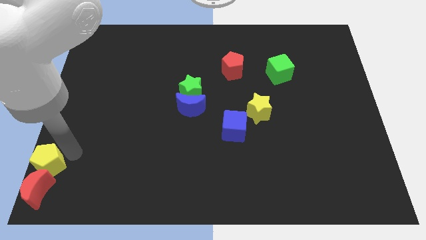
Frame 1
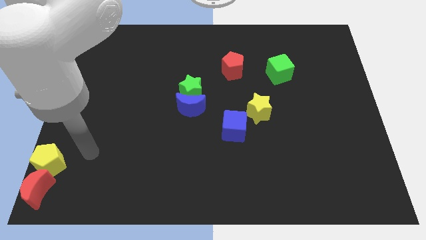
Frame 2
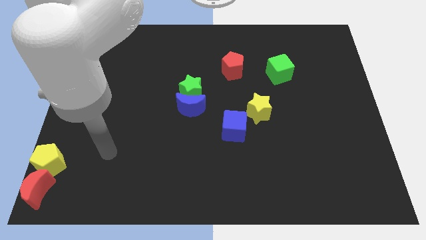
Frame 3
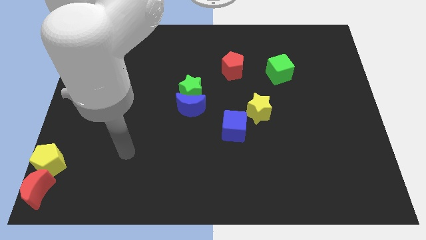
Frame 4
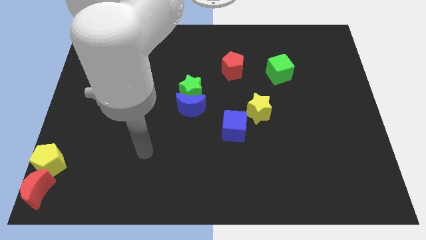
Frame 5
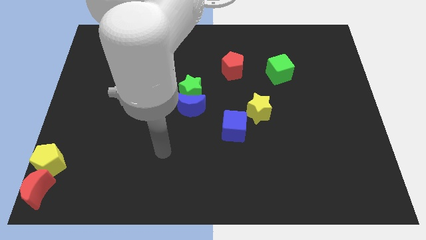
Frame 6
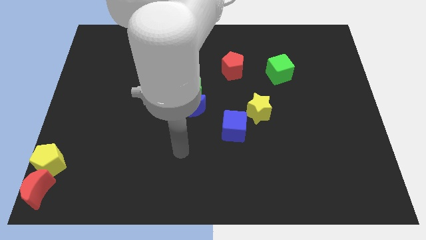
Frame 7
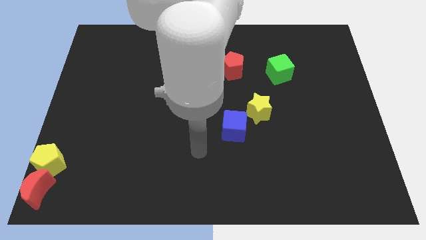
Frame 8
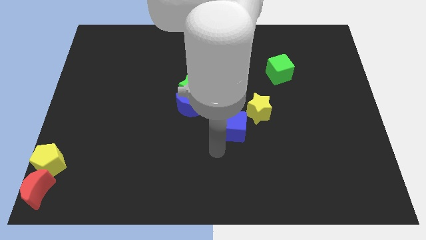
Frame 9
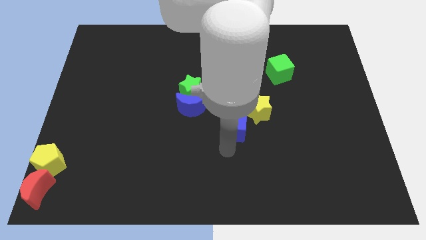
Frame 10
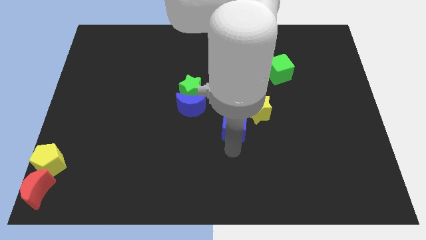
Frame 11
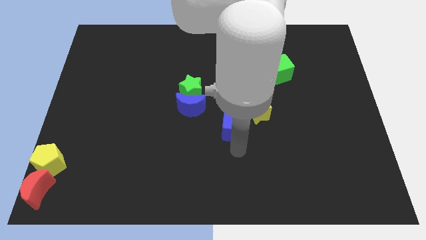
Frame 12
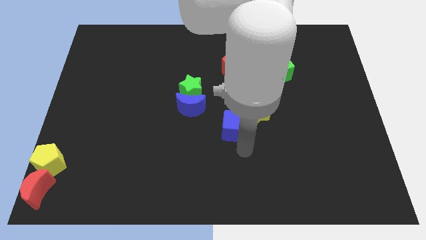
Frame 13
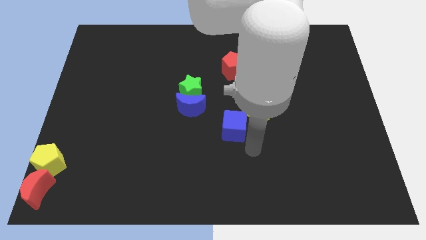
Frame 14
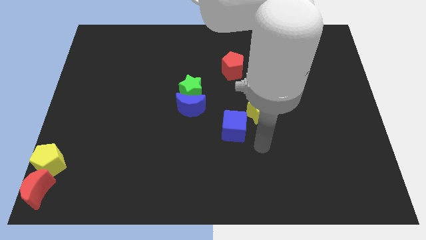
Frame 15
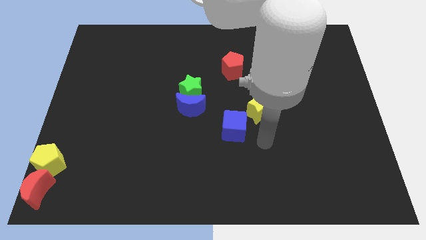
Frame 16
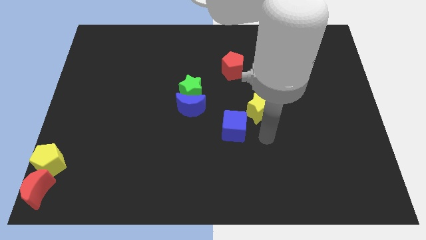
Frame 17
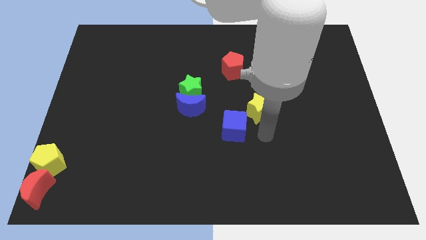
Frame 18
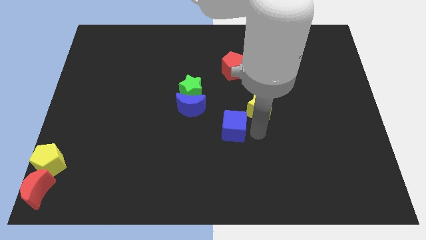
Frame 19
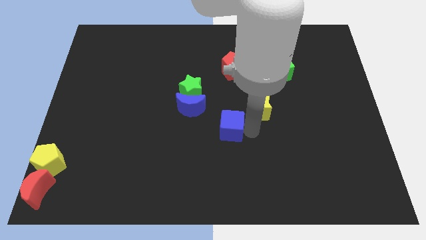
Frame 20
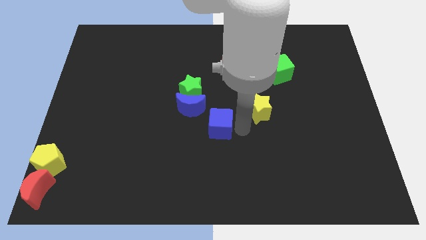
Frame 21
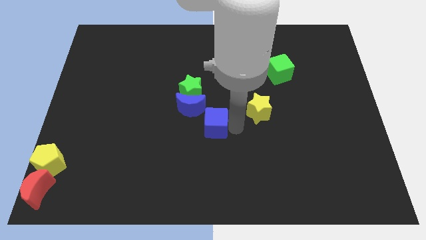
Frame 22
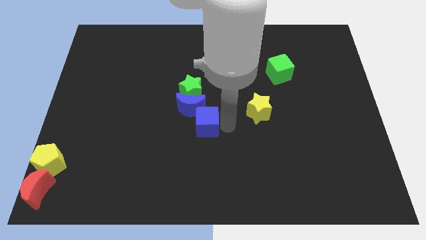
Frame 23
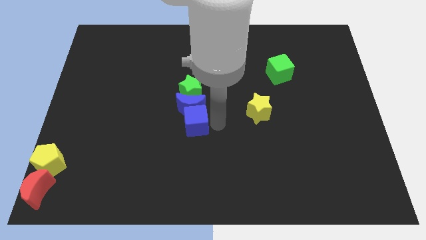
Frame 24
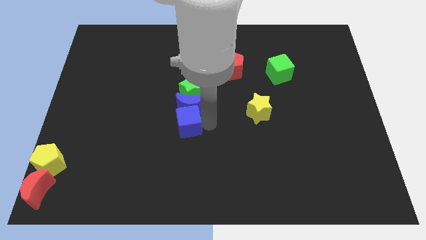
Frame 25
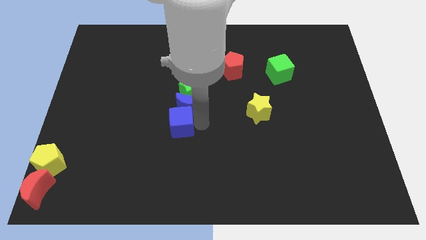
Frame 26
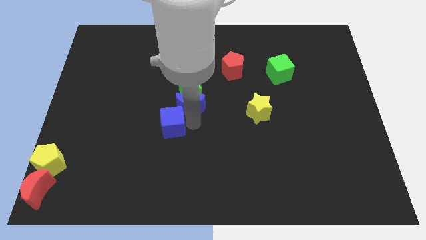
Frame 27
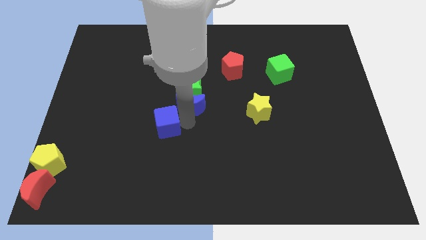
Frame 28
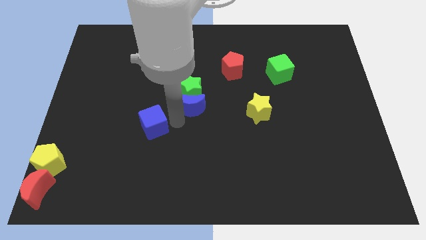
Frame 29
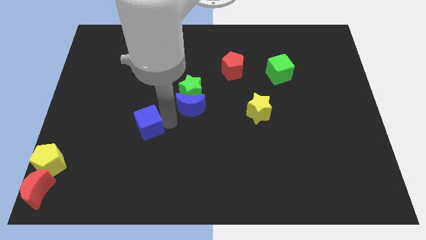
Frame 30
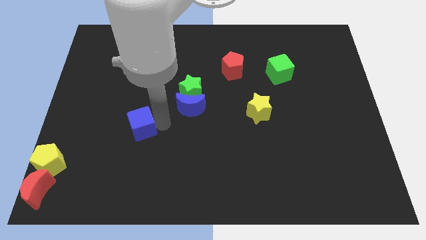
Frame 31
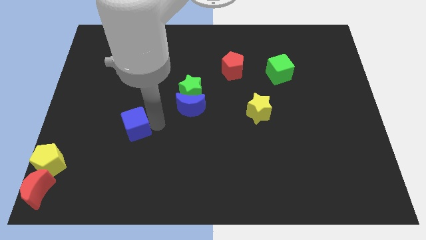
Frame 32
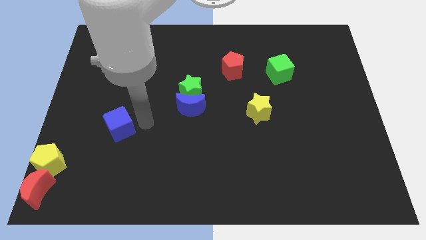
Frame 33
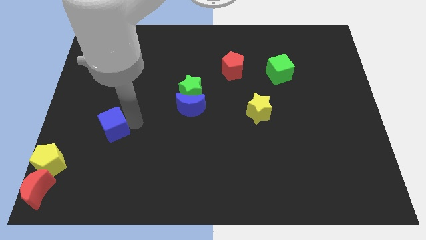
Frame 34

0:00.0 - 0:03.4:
move the blue cube diagonally top right to the yellow pentagon

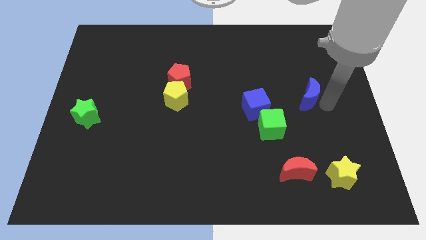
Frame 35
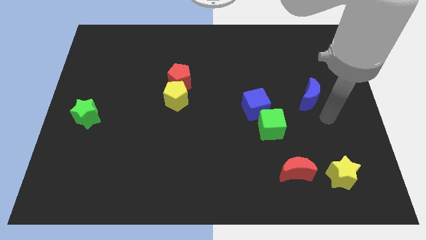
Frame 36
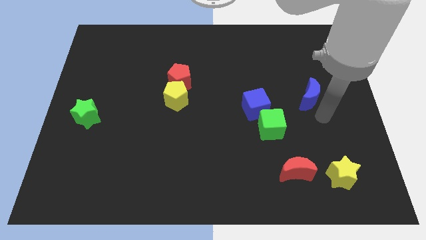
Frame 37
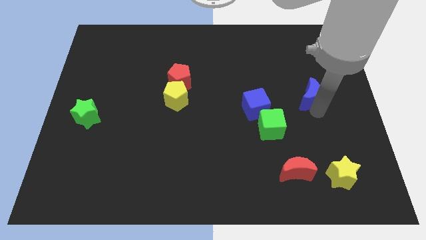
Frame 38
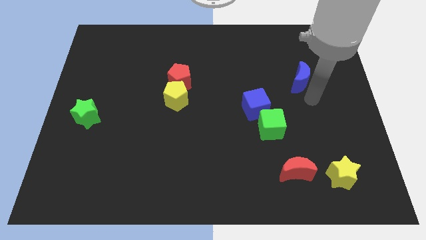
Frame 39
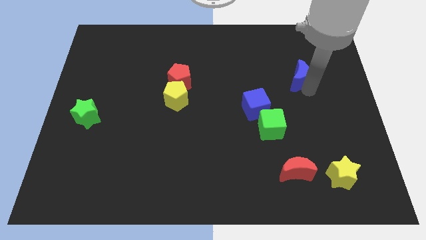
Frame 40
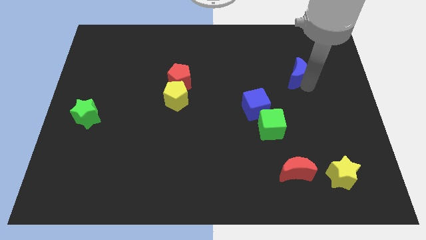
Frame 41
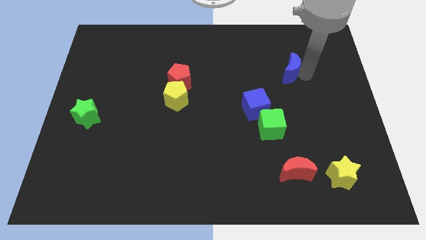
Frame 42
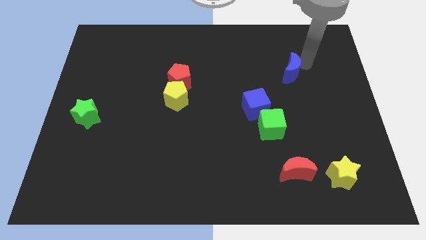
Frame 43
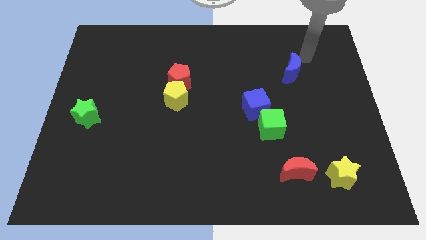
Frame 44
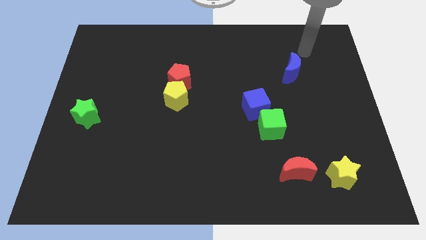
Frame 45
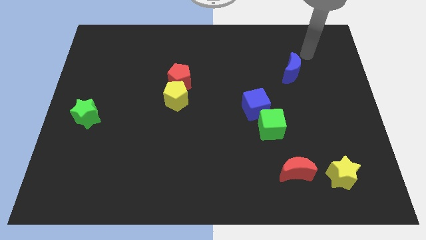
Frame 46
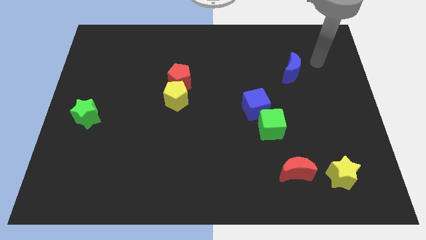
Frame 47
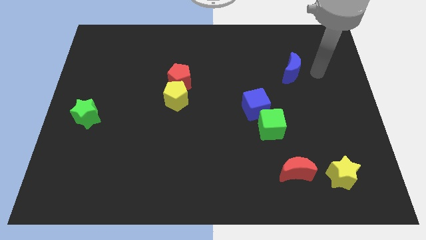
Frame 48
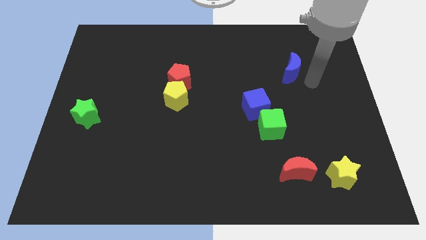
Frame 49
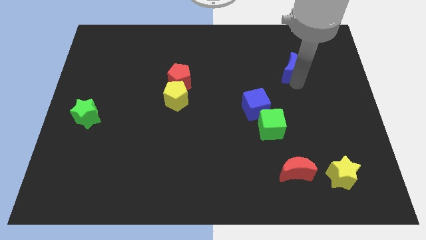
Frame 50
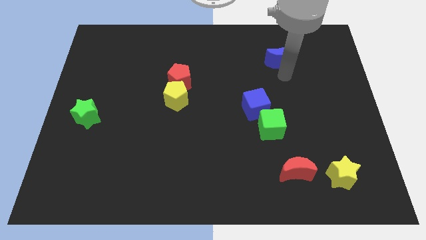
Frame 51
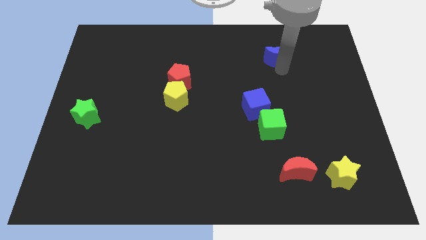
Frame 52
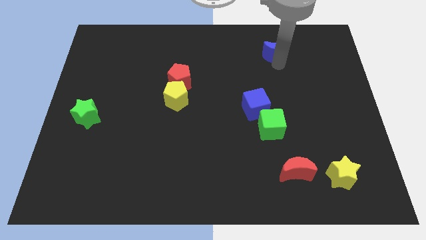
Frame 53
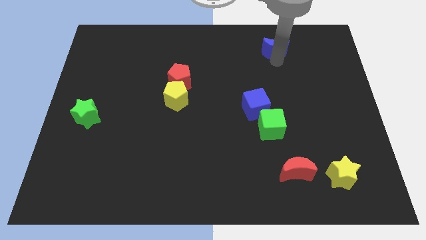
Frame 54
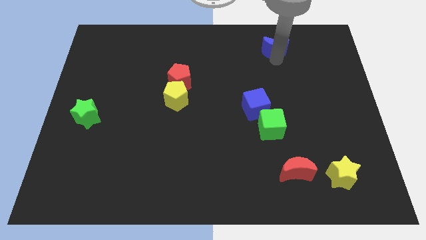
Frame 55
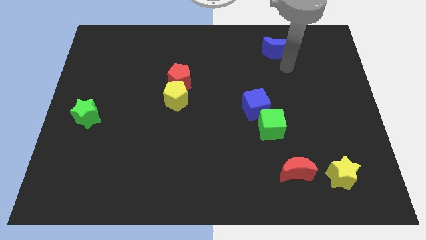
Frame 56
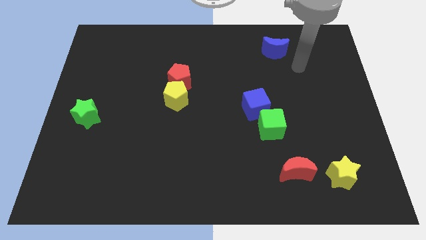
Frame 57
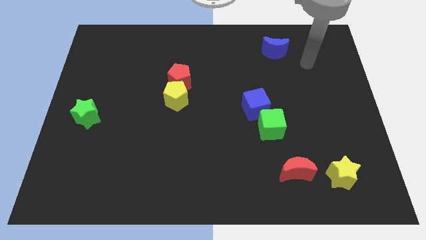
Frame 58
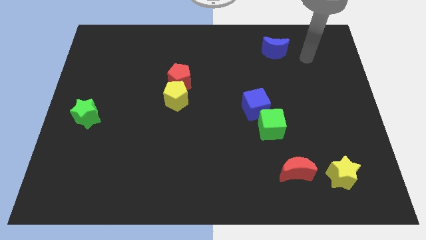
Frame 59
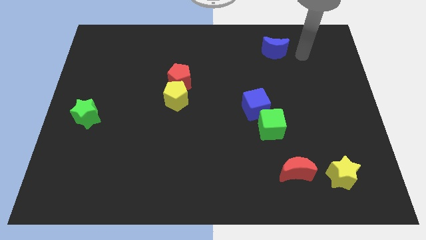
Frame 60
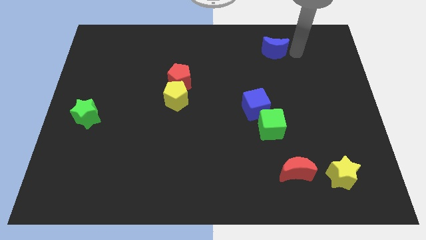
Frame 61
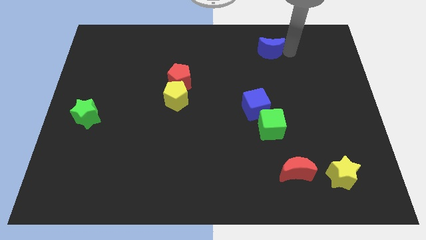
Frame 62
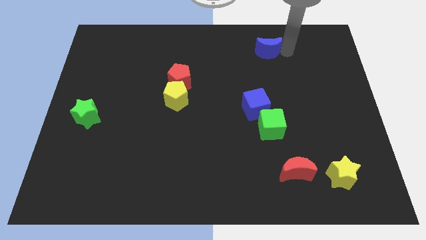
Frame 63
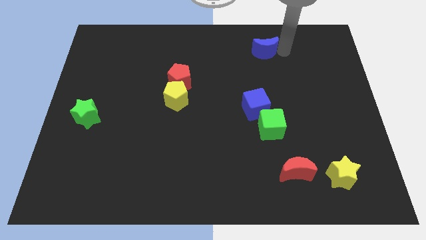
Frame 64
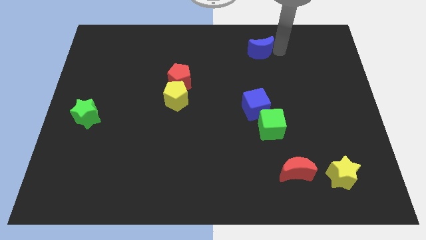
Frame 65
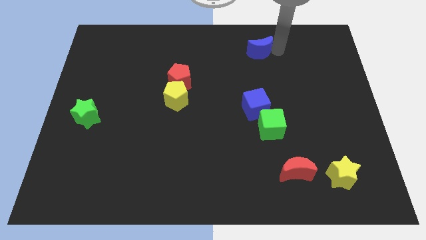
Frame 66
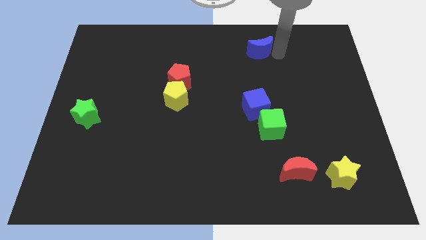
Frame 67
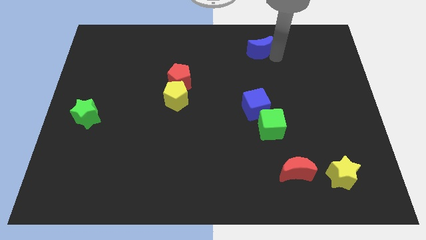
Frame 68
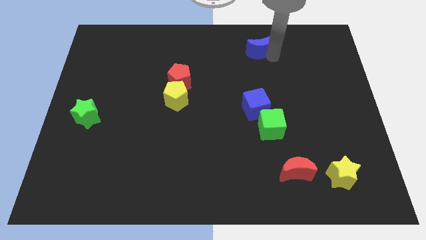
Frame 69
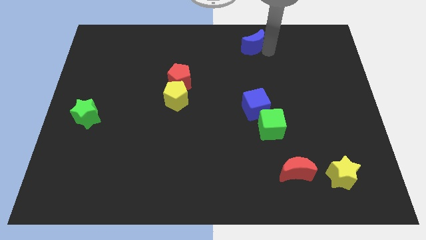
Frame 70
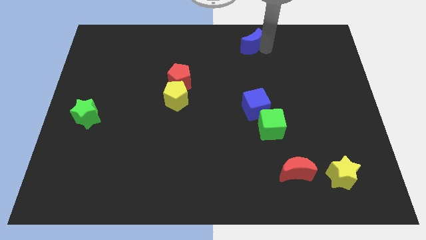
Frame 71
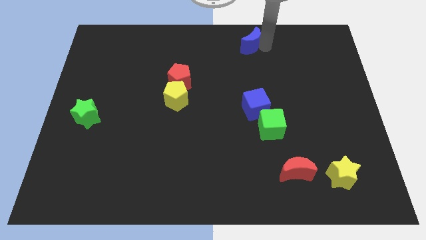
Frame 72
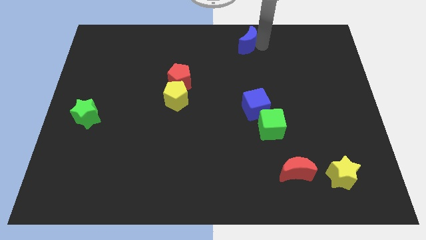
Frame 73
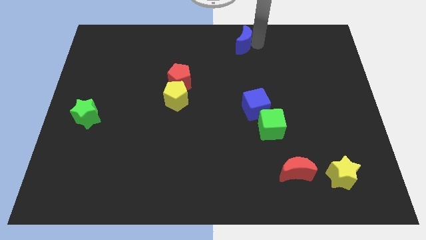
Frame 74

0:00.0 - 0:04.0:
place the blue crescent vertically above th blue cube

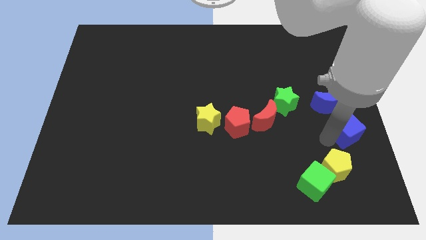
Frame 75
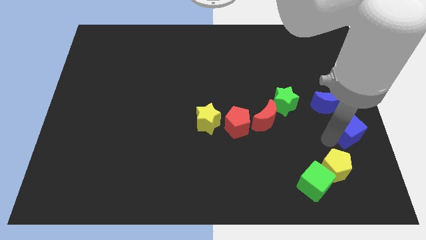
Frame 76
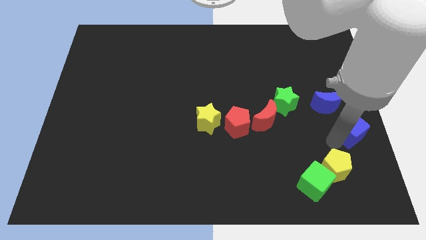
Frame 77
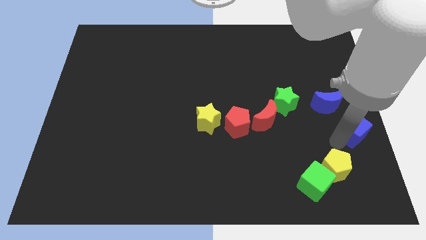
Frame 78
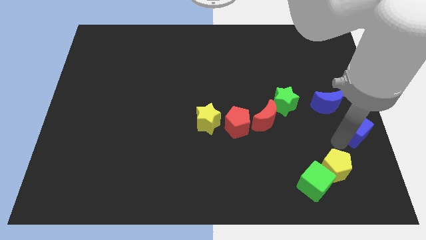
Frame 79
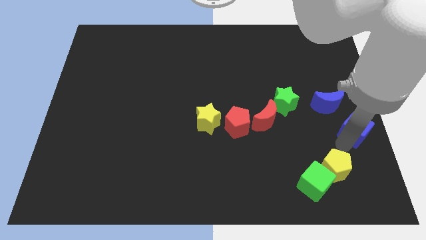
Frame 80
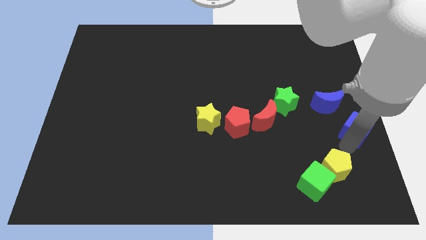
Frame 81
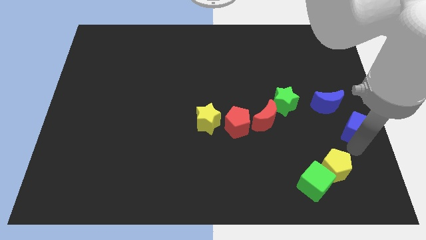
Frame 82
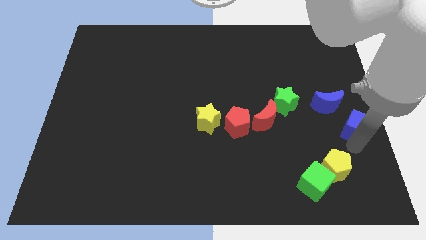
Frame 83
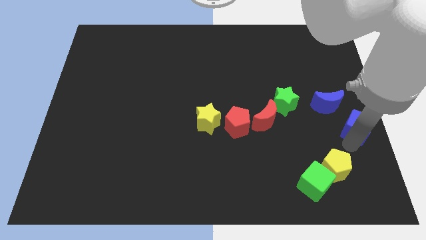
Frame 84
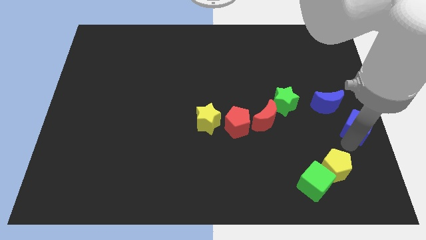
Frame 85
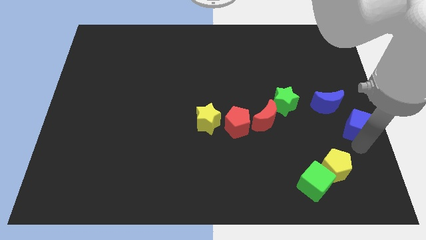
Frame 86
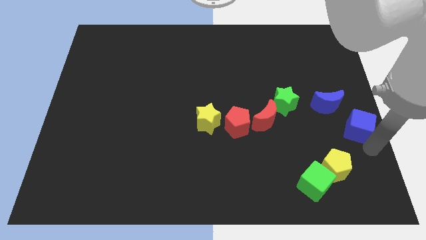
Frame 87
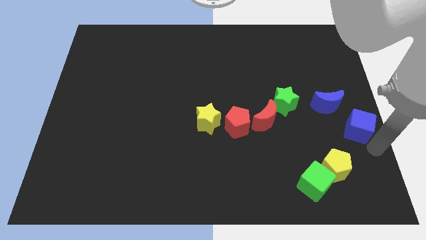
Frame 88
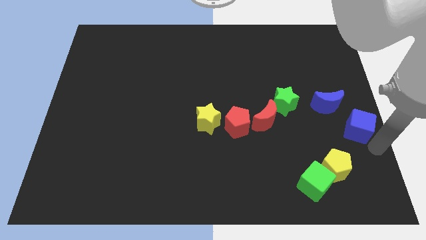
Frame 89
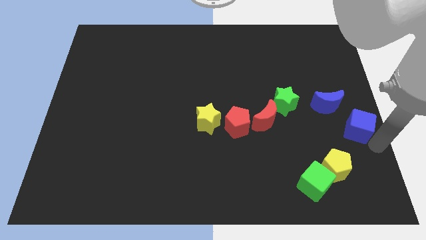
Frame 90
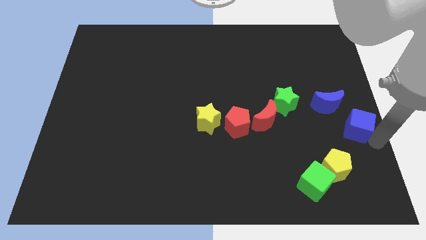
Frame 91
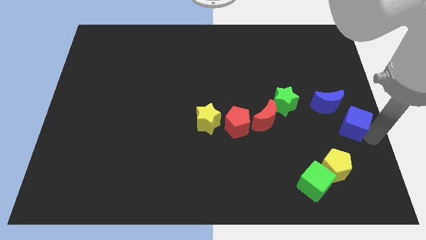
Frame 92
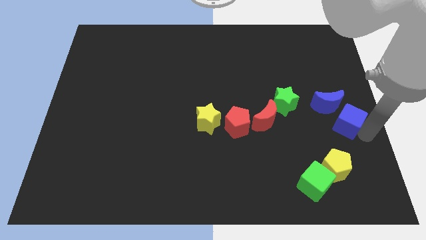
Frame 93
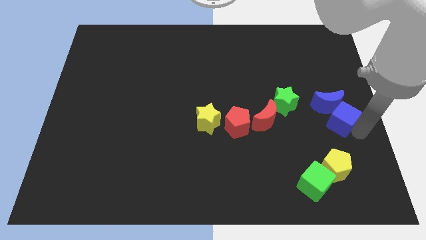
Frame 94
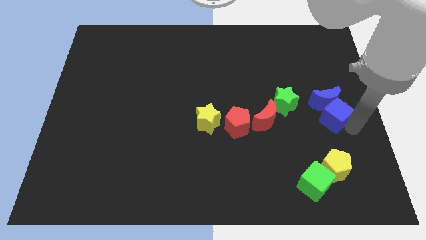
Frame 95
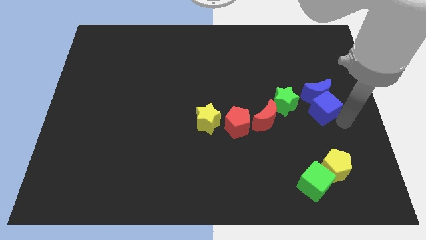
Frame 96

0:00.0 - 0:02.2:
push the blue cube into the blue moon
